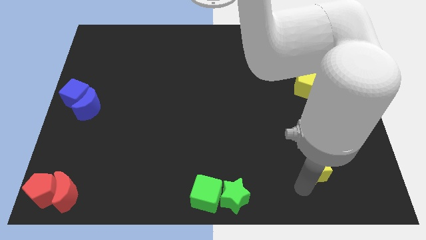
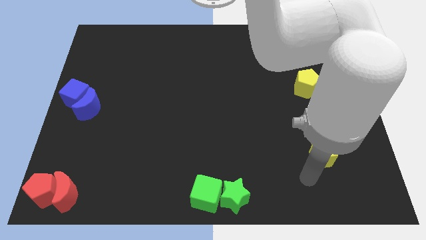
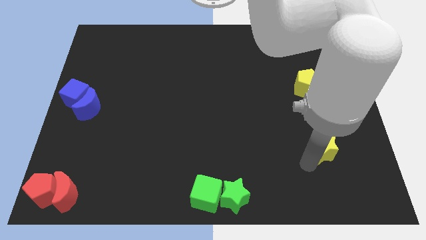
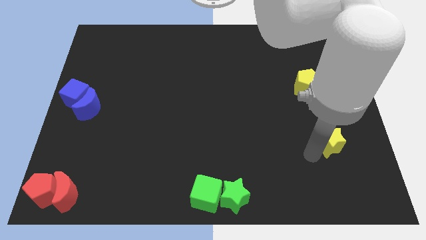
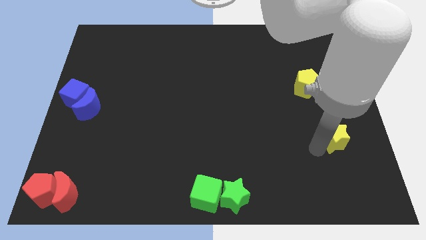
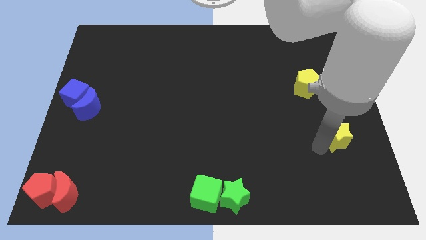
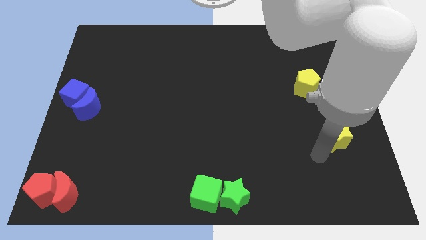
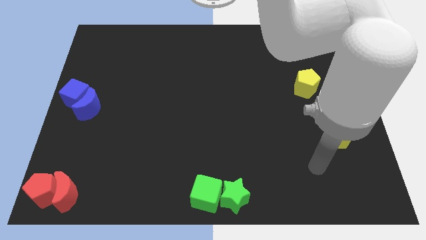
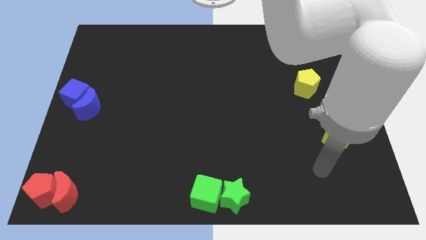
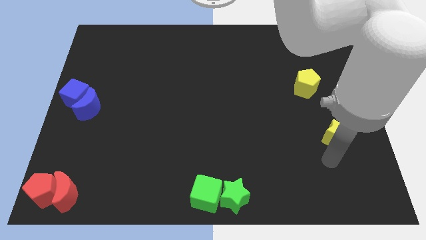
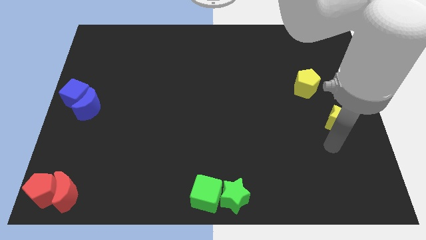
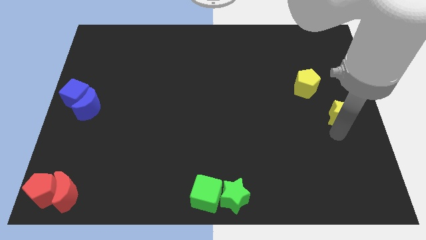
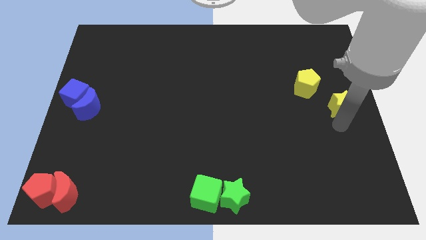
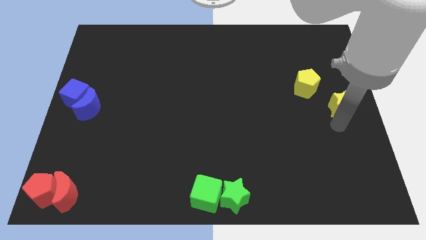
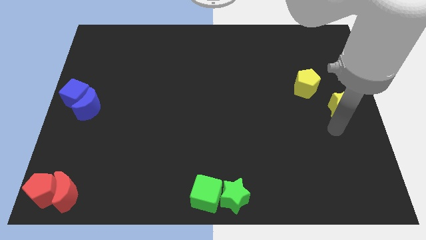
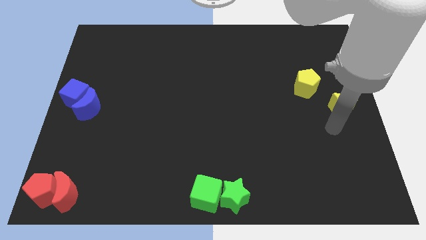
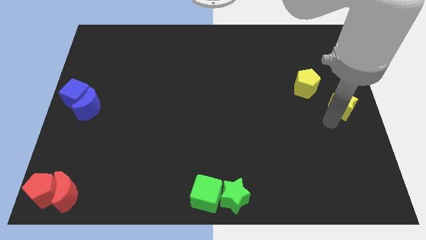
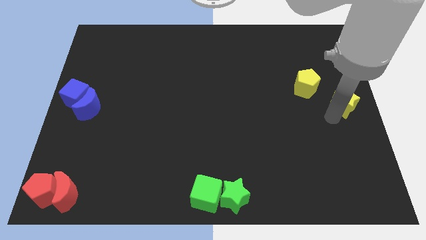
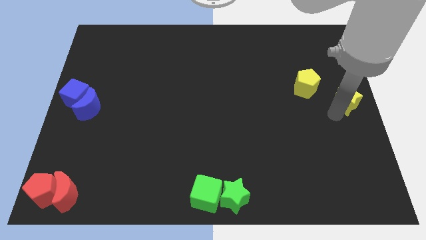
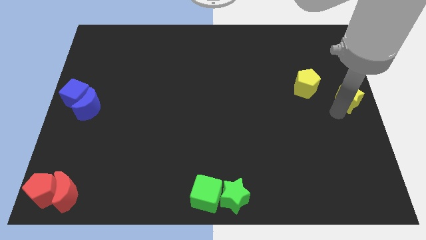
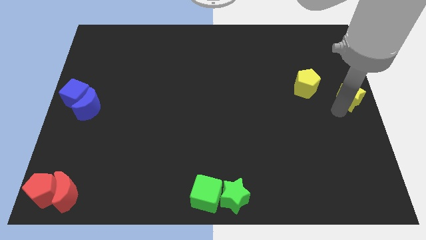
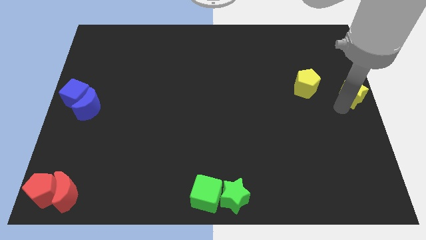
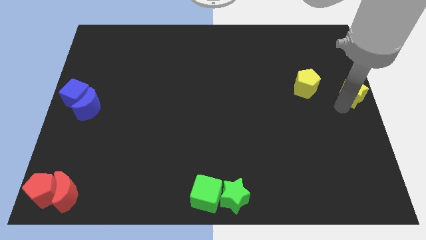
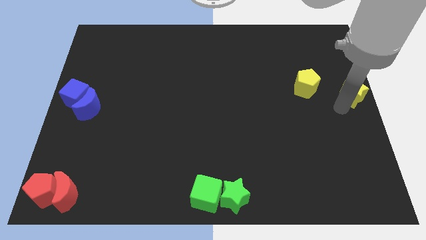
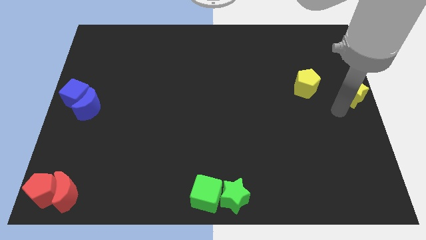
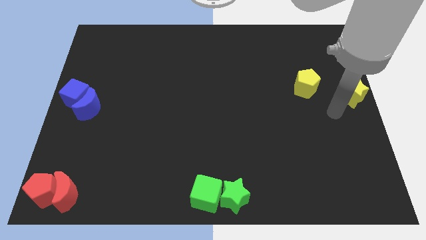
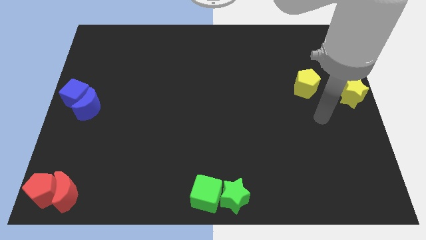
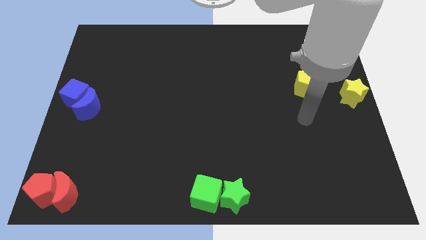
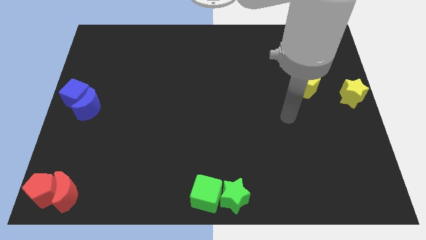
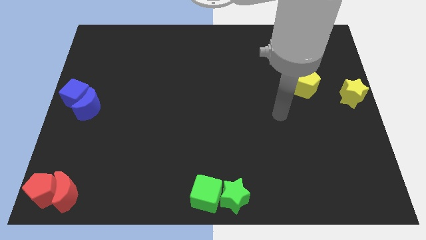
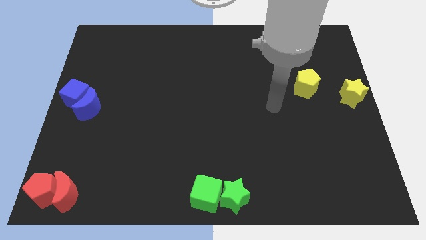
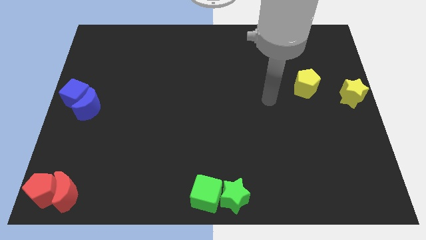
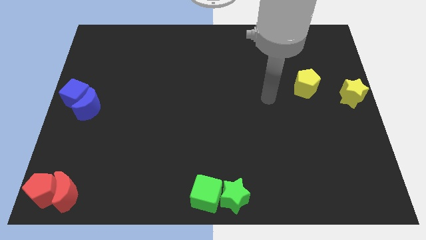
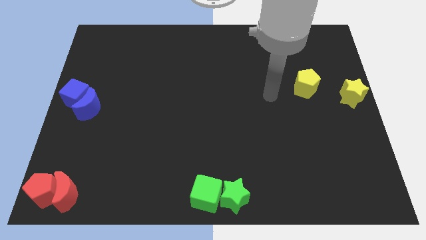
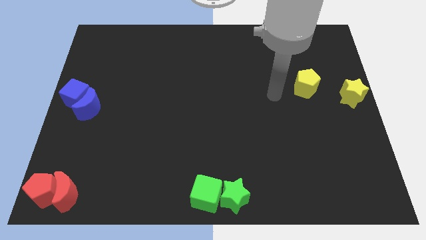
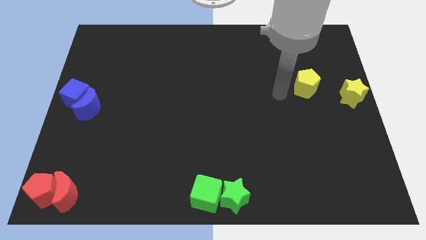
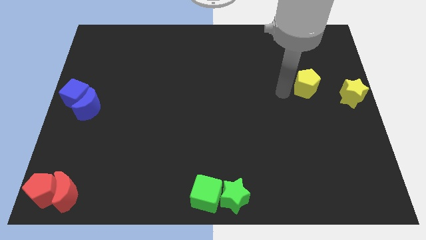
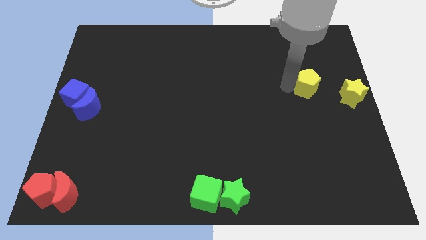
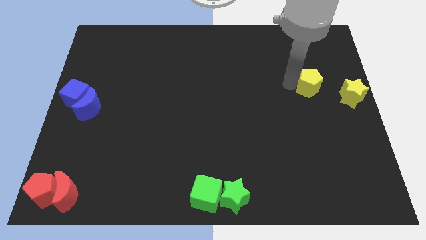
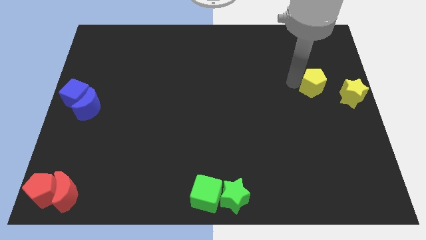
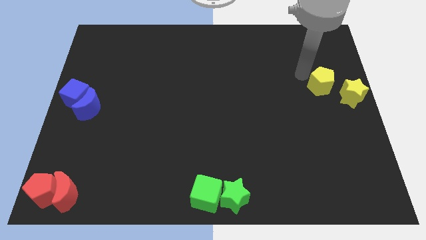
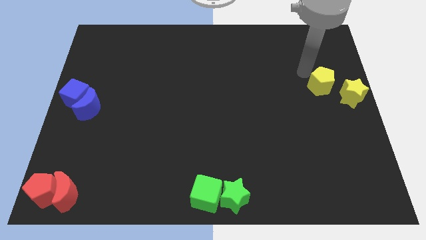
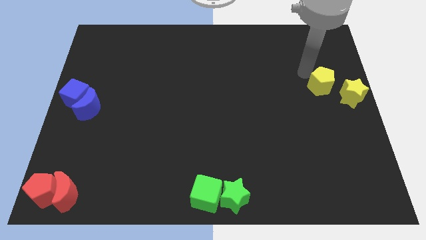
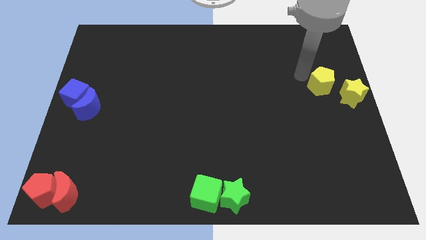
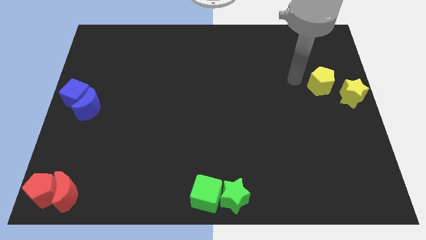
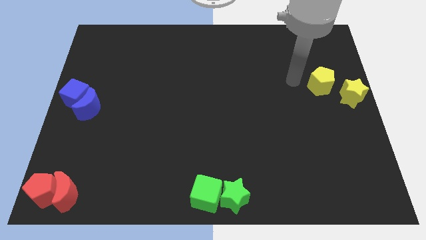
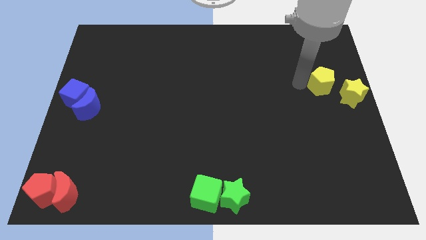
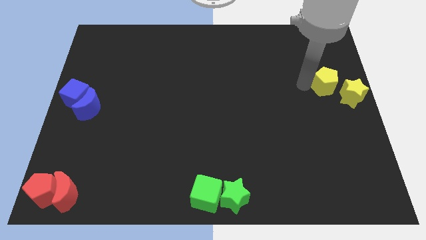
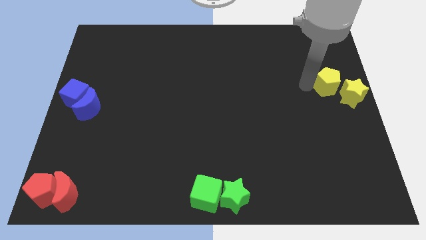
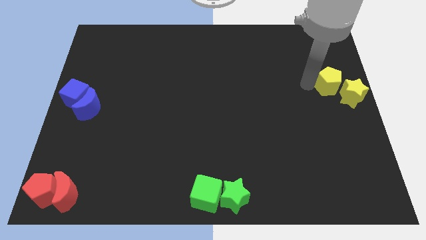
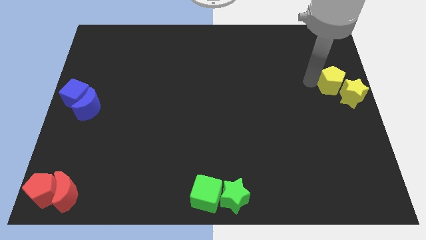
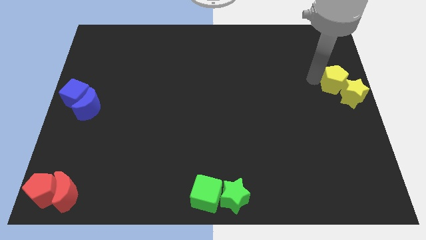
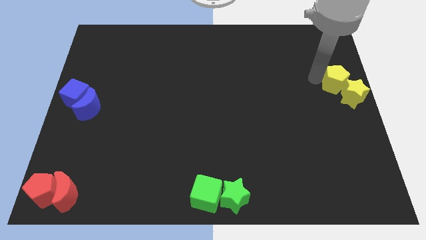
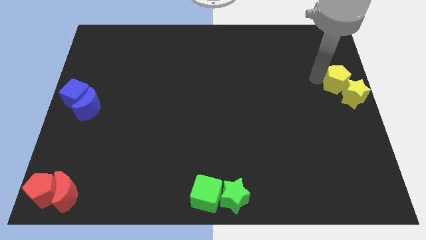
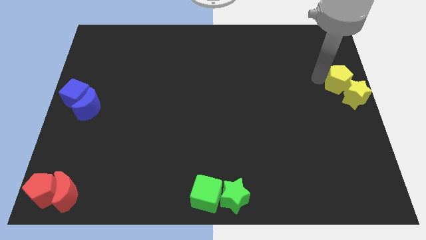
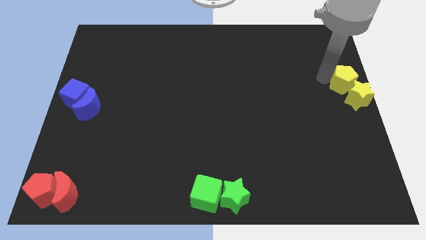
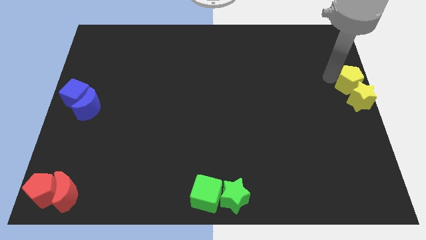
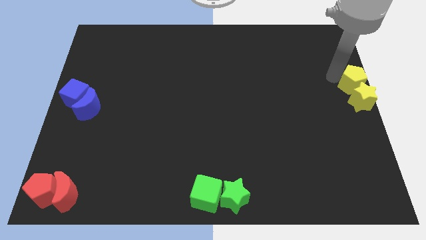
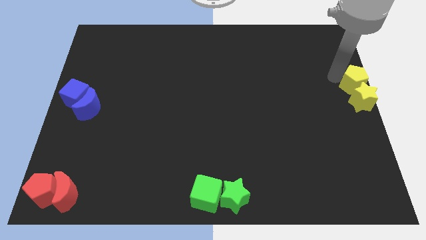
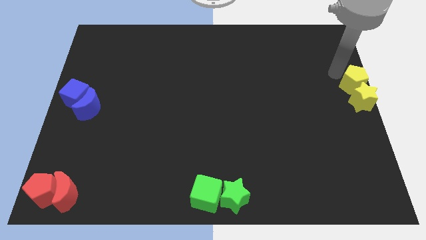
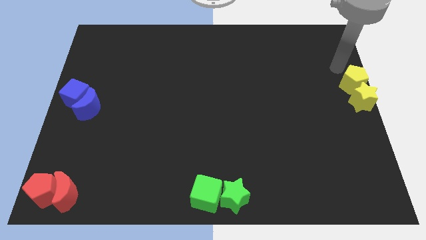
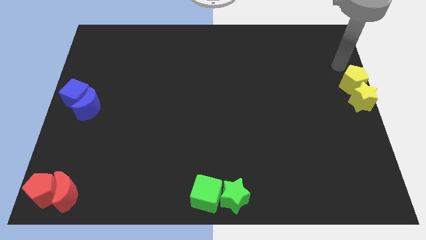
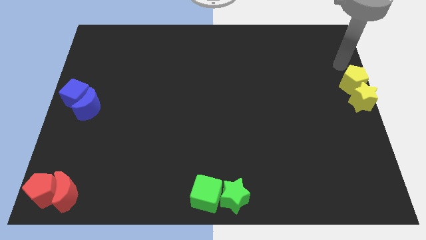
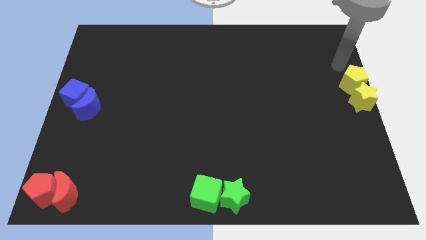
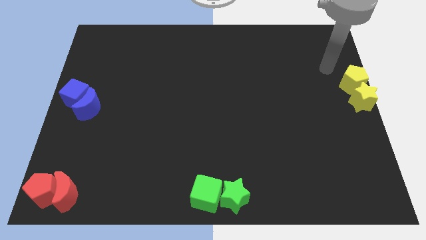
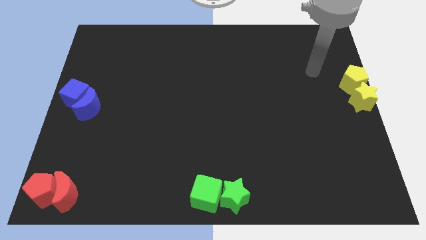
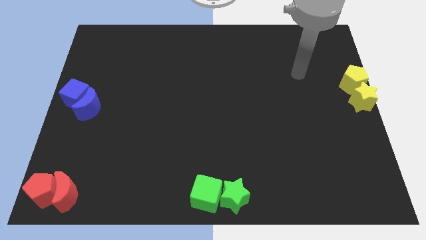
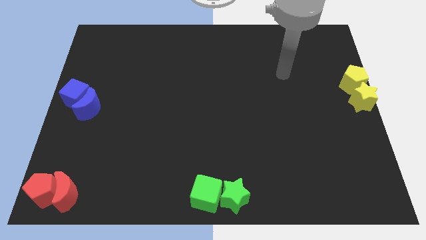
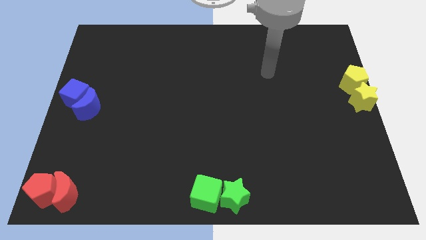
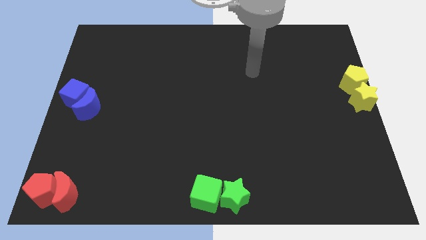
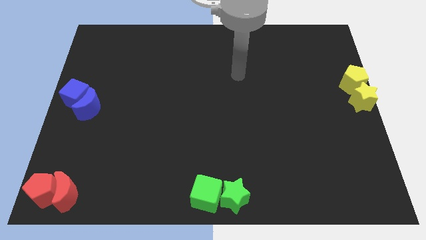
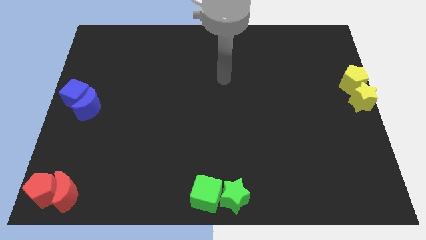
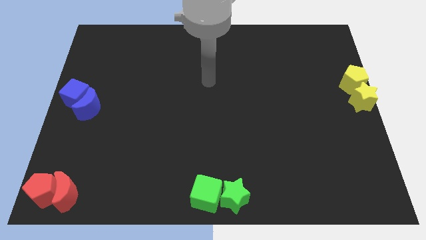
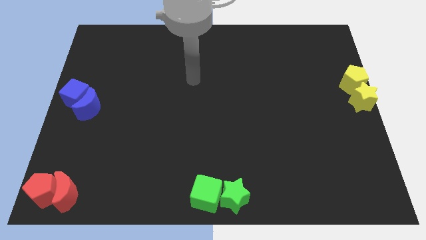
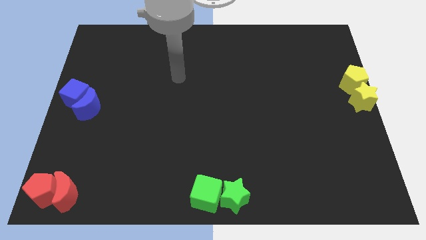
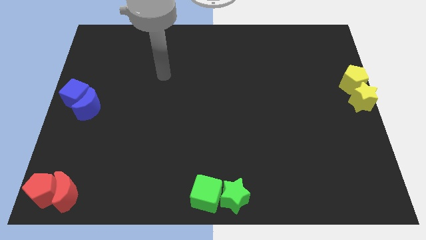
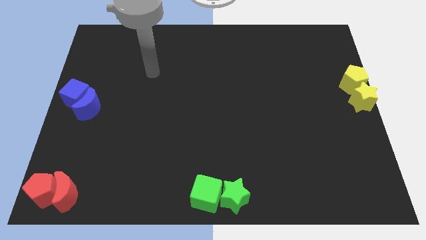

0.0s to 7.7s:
place the yellow star to the bottom of the yellow pentagon

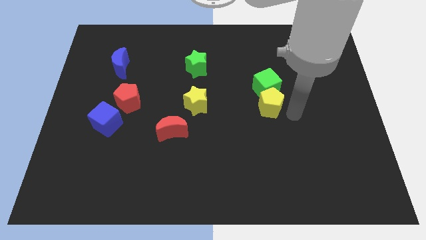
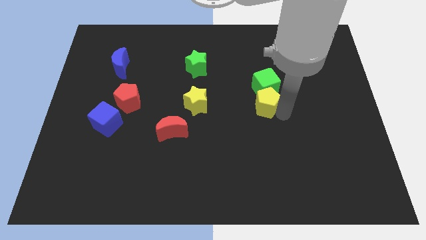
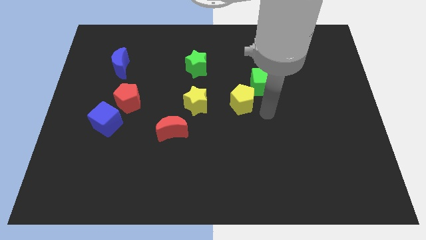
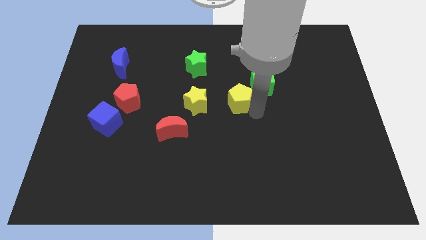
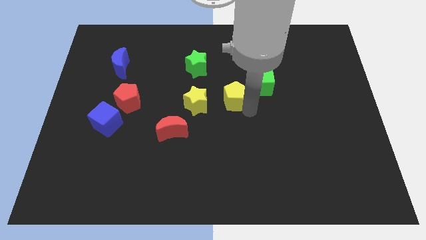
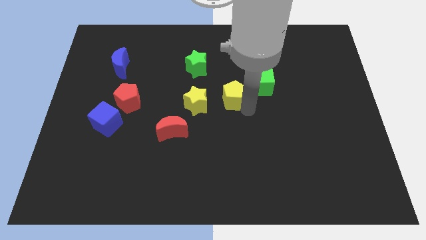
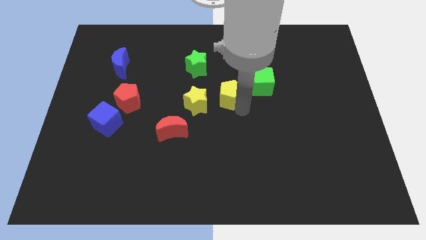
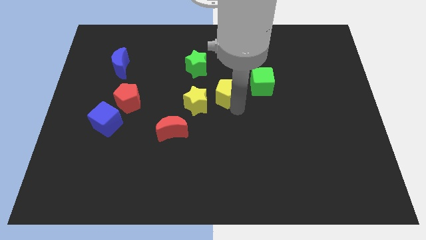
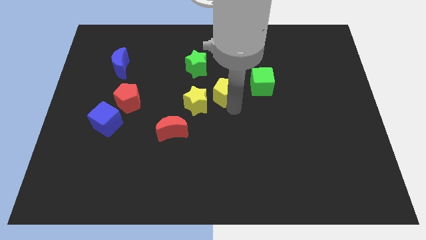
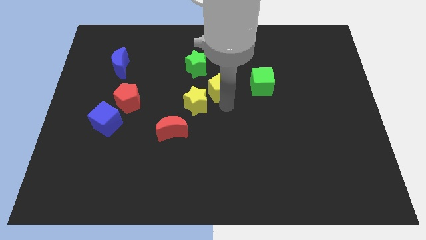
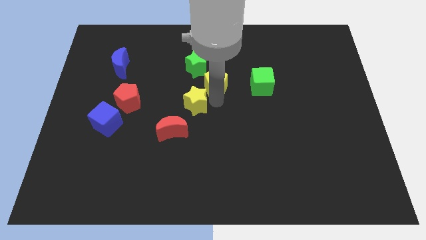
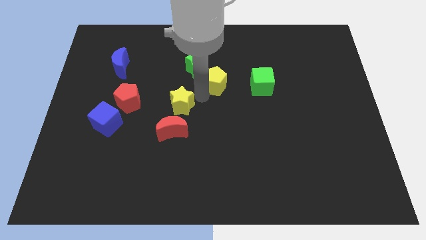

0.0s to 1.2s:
place the yellow pentagon to the left of the green cube
